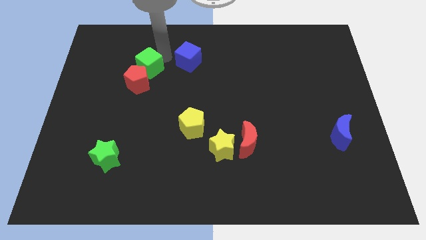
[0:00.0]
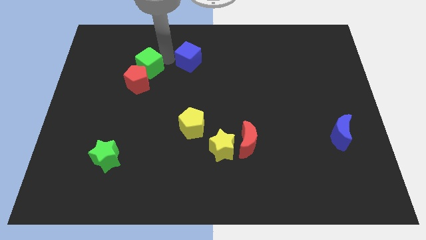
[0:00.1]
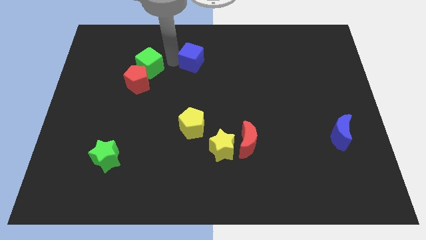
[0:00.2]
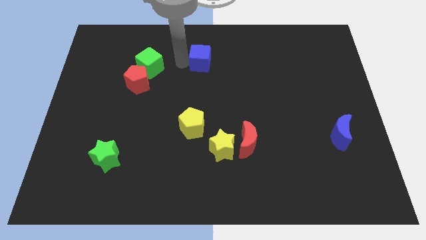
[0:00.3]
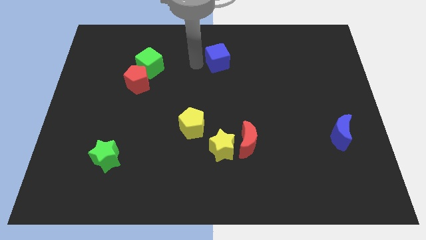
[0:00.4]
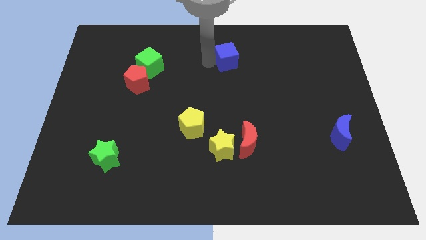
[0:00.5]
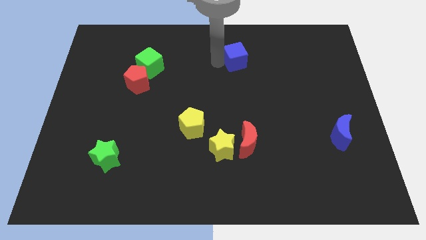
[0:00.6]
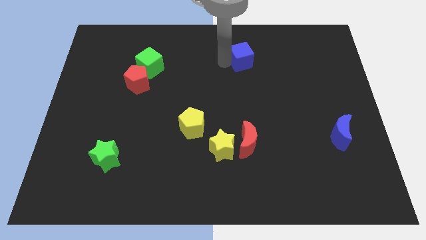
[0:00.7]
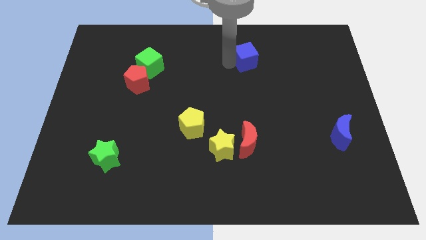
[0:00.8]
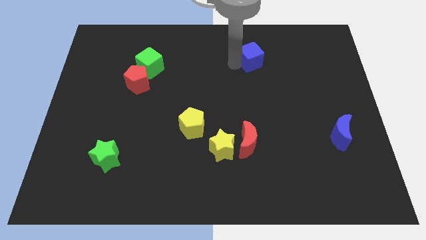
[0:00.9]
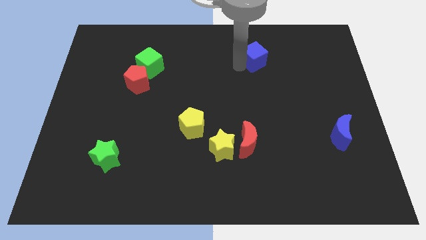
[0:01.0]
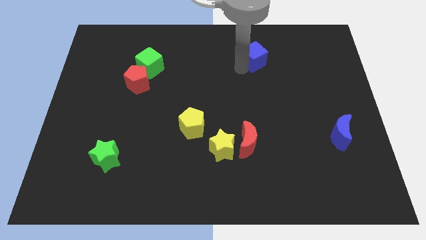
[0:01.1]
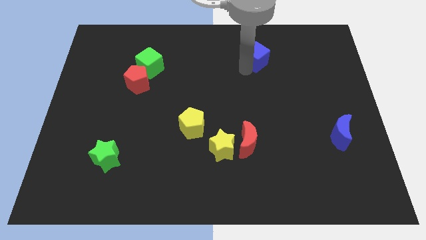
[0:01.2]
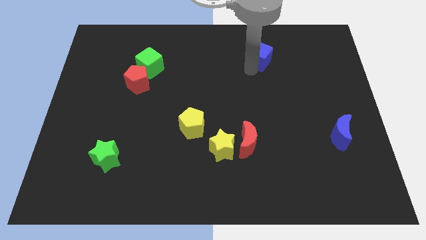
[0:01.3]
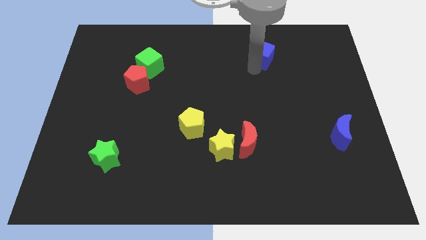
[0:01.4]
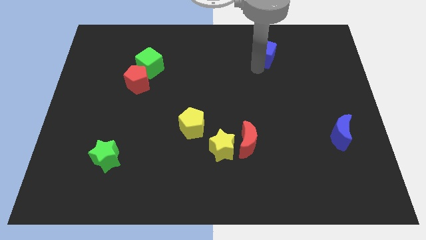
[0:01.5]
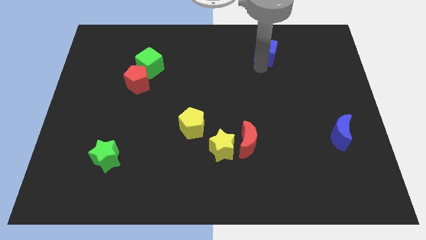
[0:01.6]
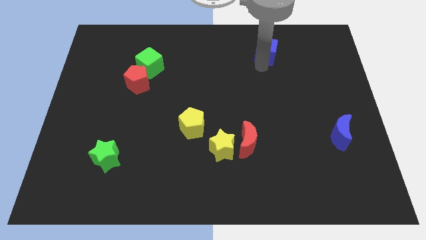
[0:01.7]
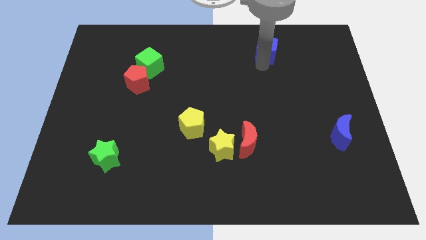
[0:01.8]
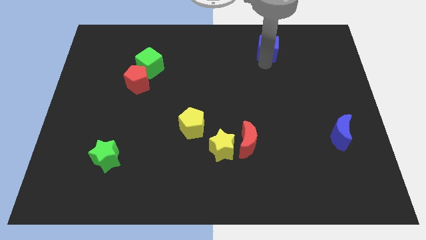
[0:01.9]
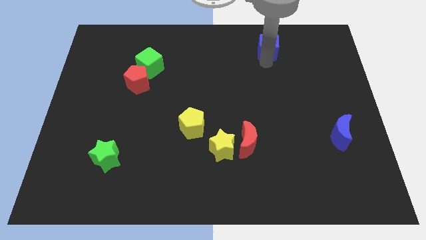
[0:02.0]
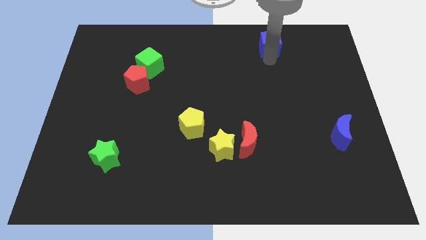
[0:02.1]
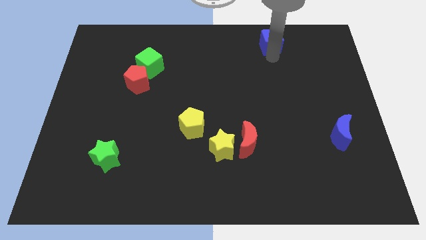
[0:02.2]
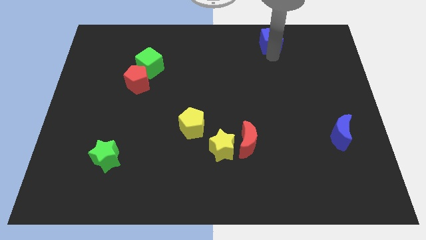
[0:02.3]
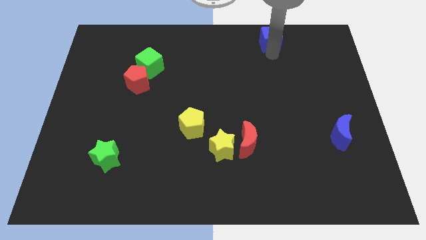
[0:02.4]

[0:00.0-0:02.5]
move the blue to the top right of the red crescent

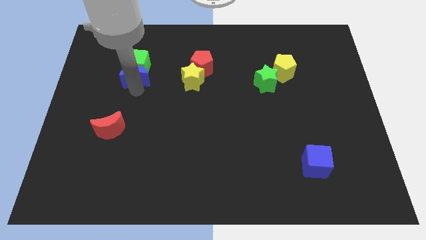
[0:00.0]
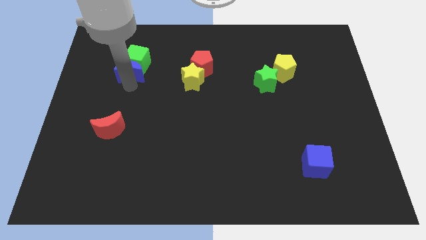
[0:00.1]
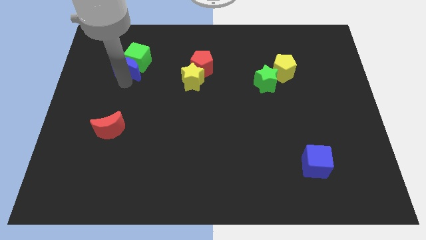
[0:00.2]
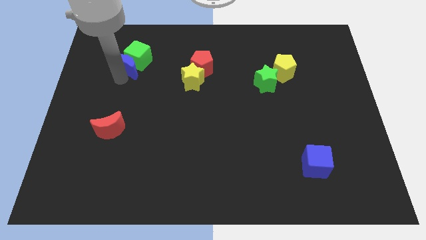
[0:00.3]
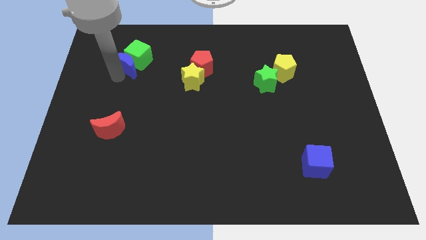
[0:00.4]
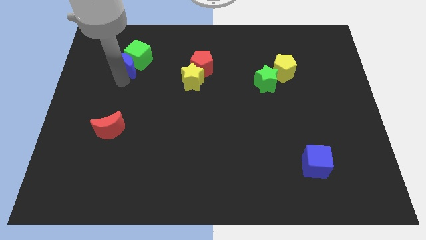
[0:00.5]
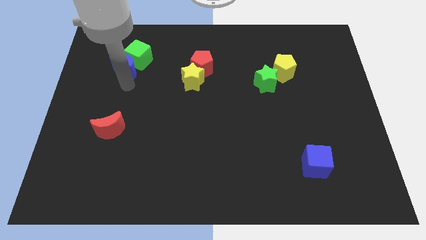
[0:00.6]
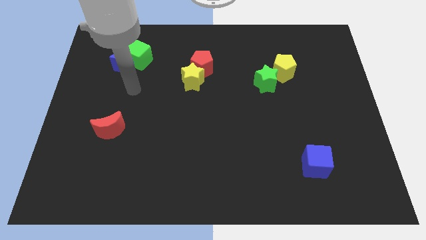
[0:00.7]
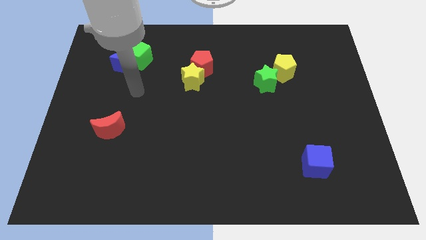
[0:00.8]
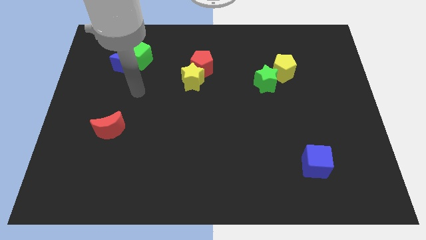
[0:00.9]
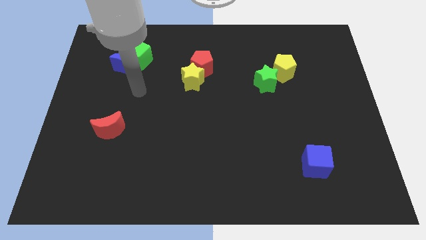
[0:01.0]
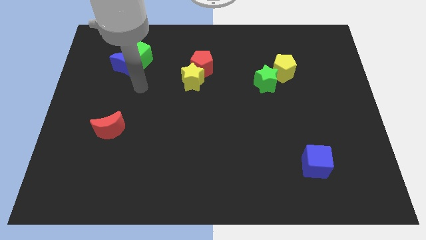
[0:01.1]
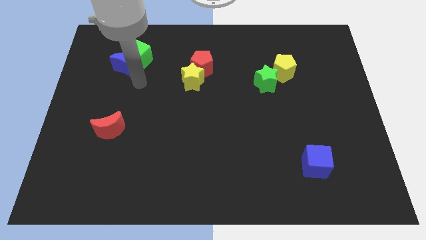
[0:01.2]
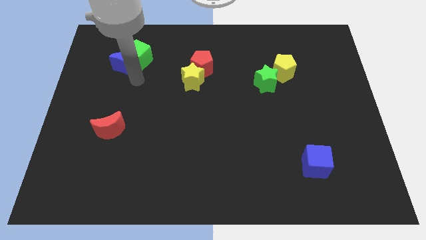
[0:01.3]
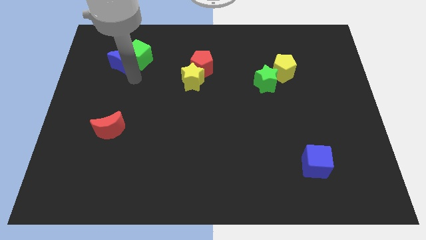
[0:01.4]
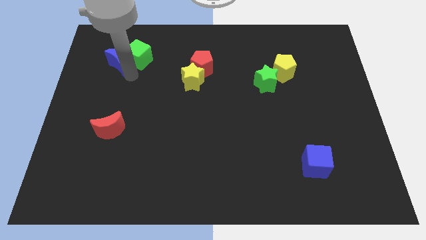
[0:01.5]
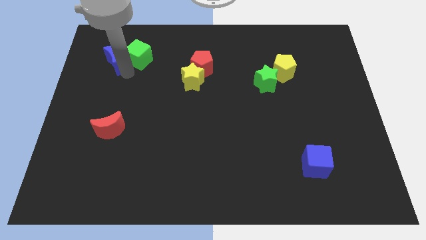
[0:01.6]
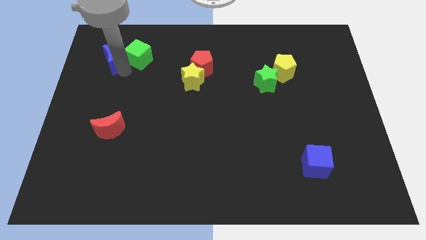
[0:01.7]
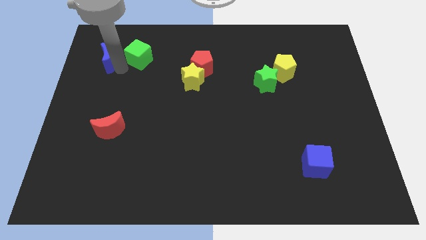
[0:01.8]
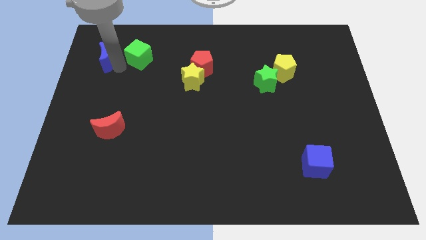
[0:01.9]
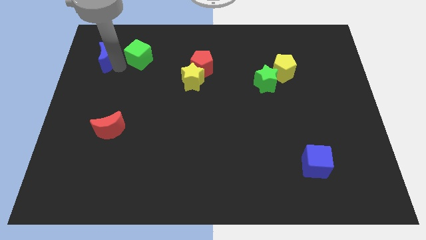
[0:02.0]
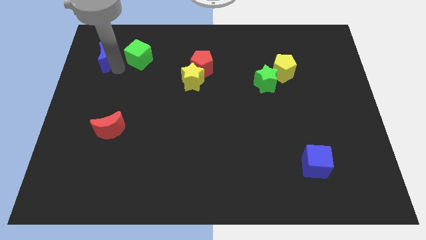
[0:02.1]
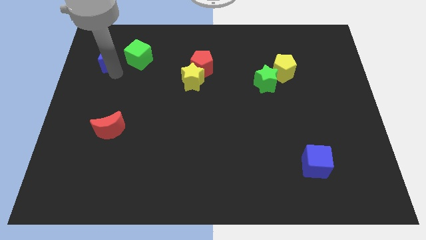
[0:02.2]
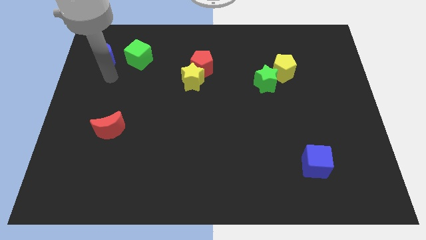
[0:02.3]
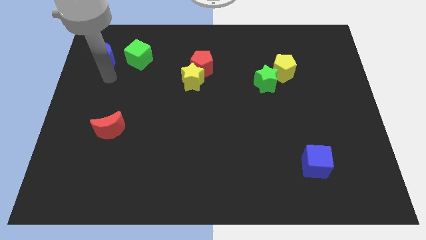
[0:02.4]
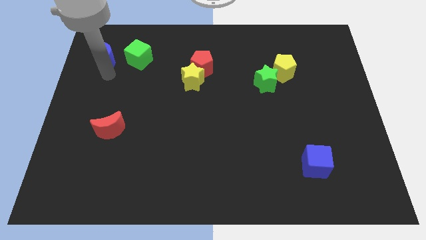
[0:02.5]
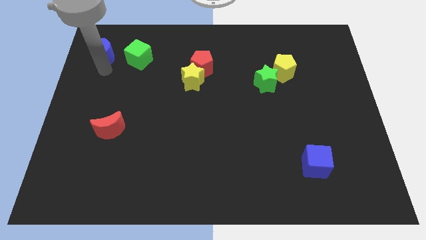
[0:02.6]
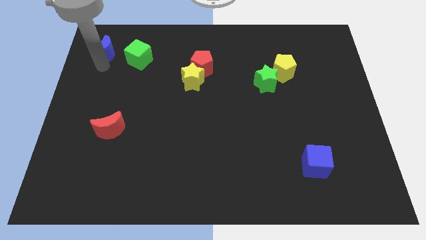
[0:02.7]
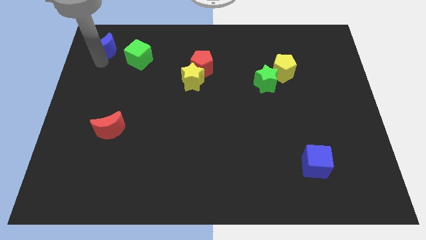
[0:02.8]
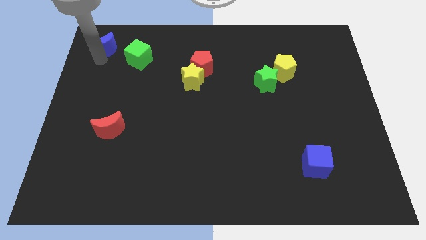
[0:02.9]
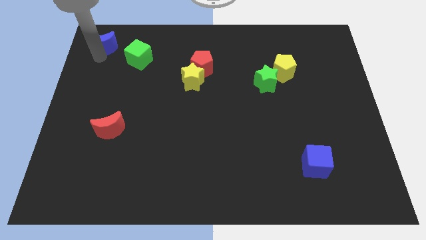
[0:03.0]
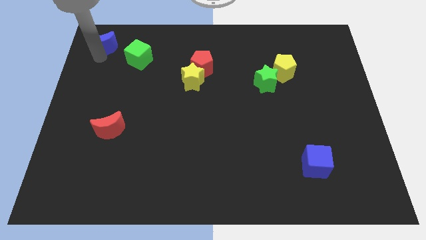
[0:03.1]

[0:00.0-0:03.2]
slide the blue crescent away from the green cube

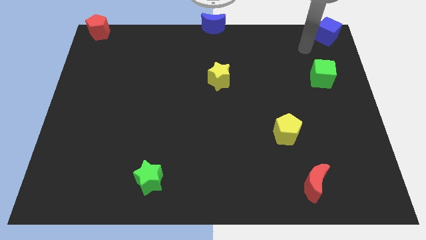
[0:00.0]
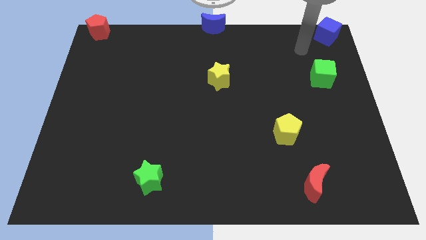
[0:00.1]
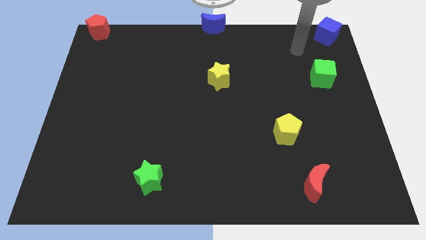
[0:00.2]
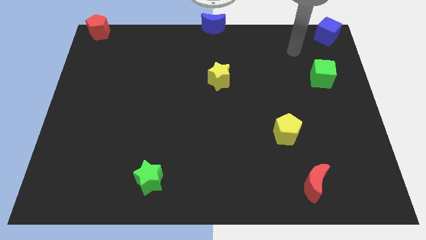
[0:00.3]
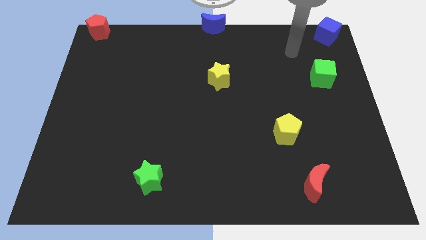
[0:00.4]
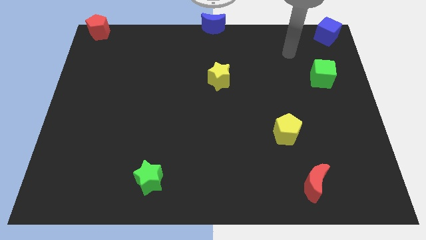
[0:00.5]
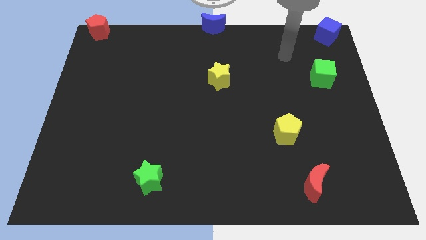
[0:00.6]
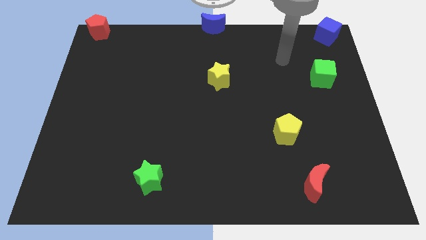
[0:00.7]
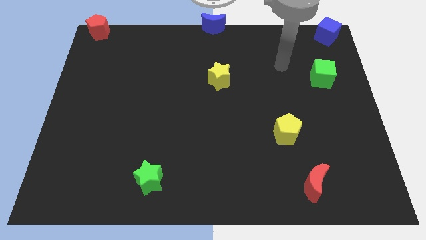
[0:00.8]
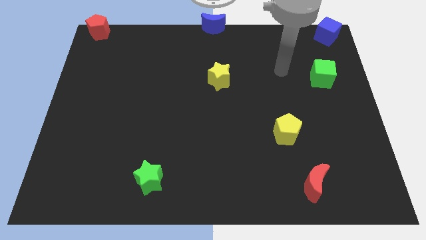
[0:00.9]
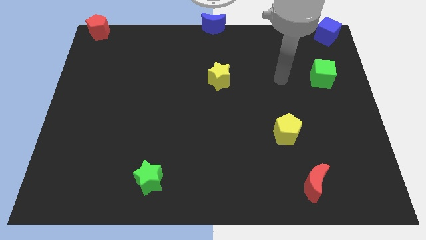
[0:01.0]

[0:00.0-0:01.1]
move your hand in between the yellow star and green cube

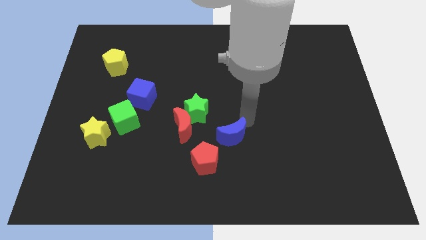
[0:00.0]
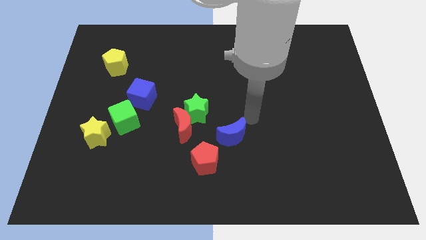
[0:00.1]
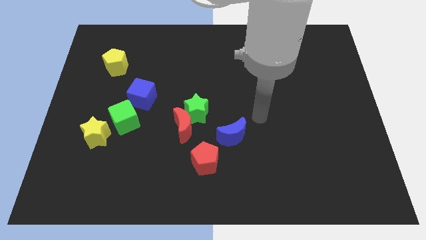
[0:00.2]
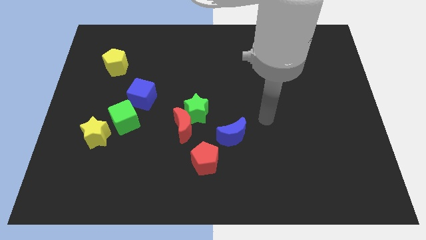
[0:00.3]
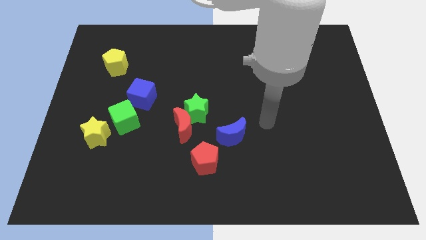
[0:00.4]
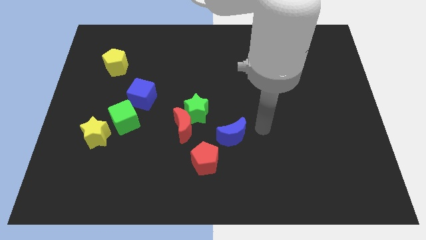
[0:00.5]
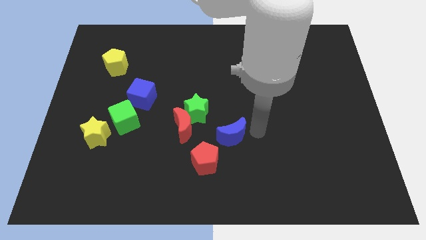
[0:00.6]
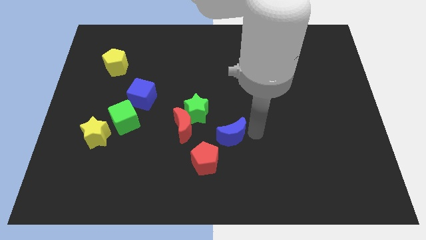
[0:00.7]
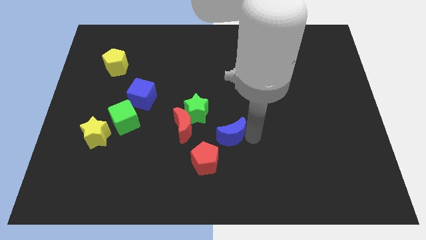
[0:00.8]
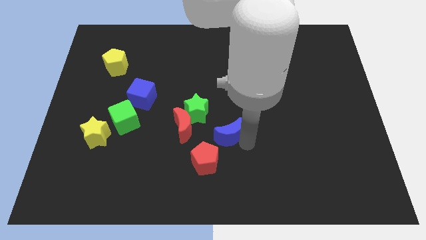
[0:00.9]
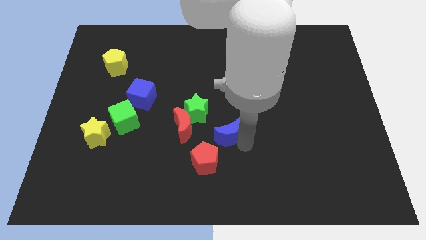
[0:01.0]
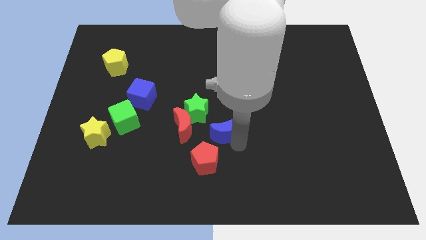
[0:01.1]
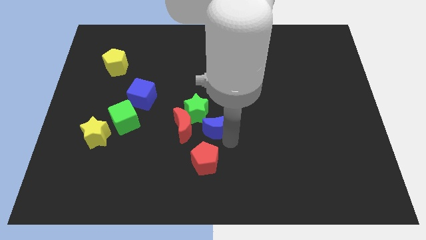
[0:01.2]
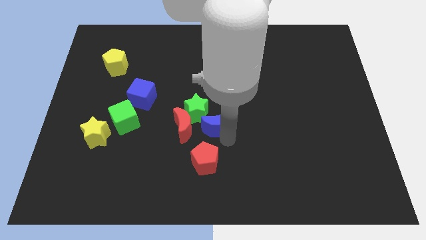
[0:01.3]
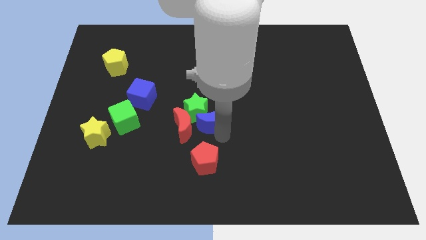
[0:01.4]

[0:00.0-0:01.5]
slide the blue cube into the bottom side of the green star

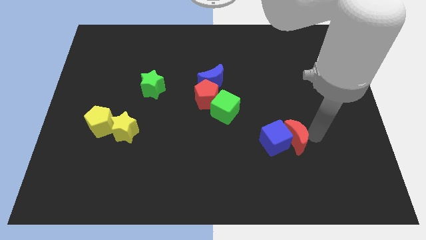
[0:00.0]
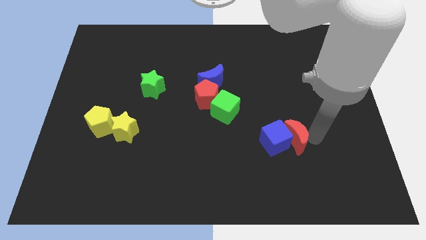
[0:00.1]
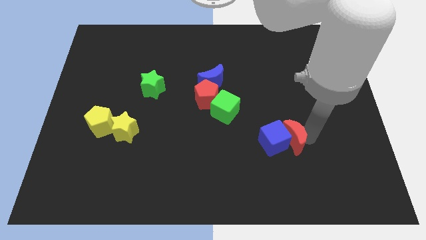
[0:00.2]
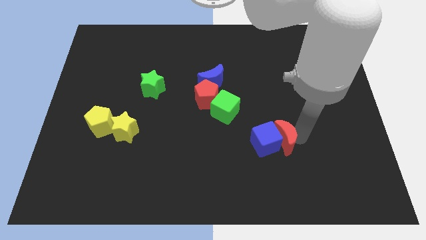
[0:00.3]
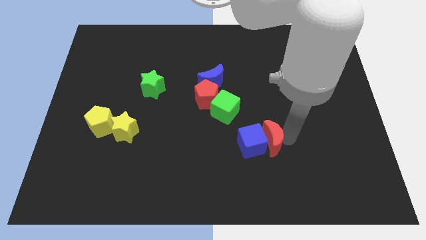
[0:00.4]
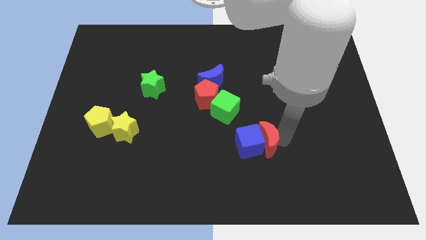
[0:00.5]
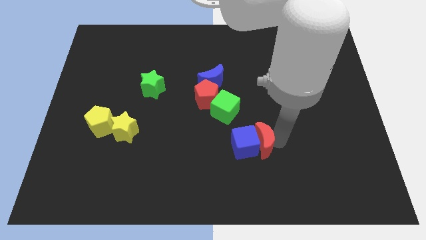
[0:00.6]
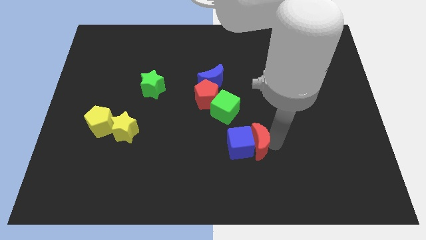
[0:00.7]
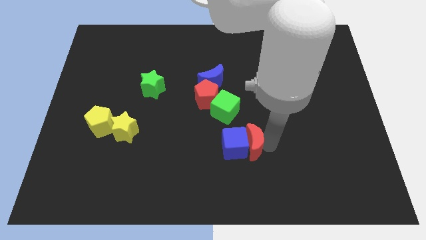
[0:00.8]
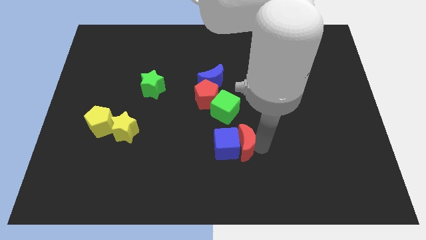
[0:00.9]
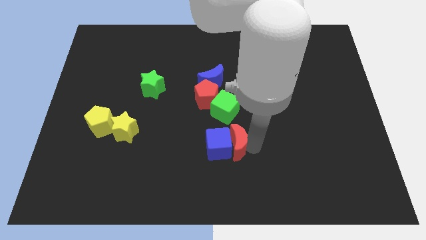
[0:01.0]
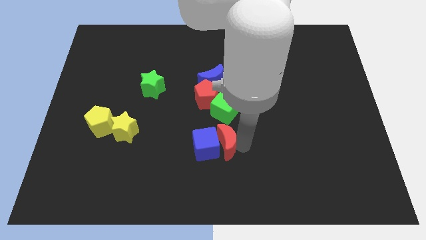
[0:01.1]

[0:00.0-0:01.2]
push the red crescent into the blue cube
